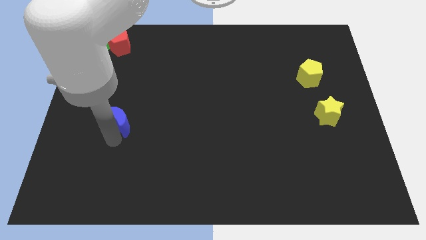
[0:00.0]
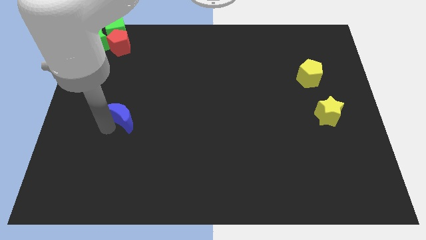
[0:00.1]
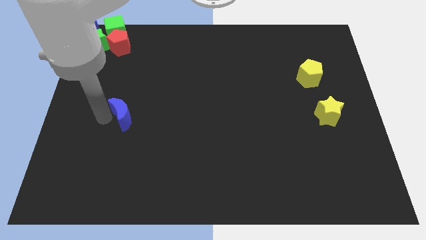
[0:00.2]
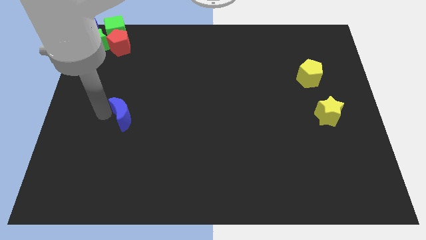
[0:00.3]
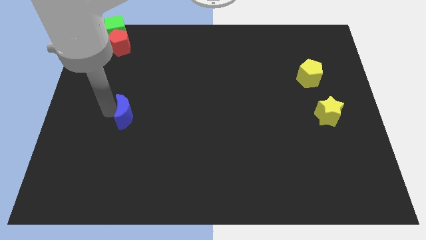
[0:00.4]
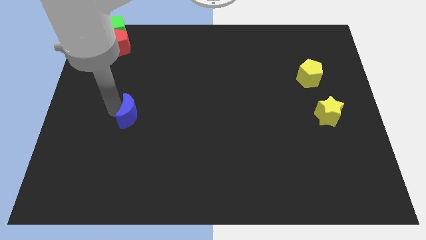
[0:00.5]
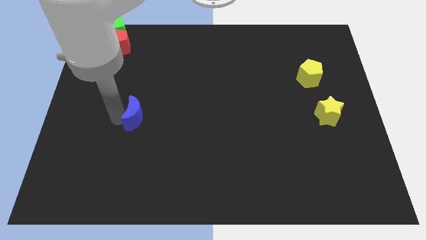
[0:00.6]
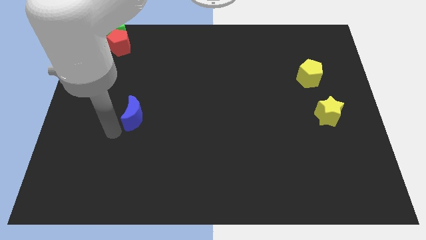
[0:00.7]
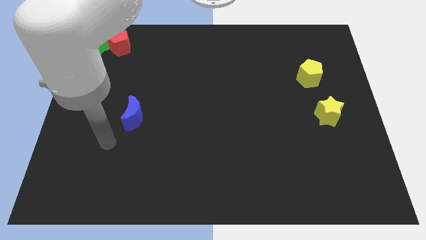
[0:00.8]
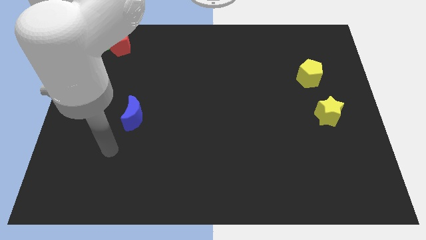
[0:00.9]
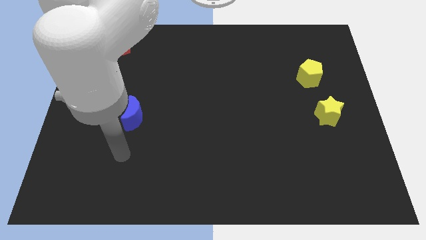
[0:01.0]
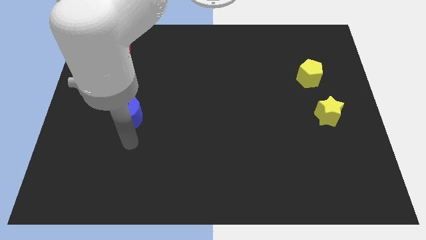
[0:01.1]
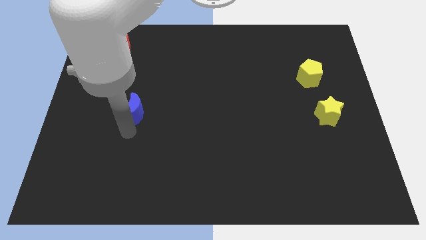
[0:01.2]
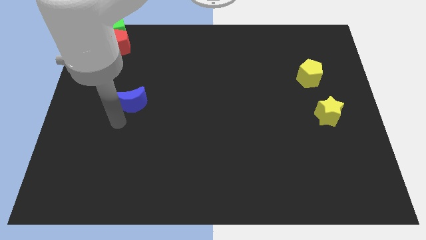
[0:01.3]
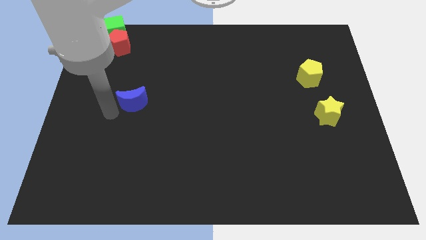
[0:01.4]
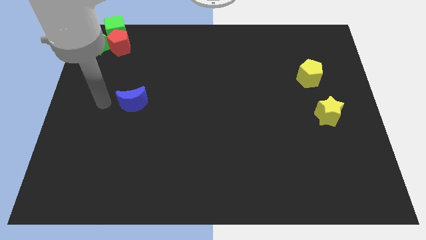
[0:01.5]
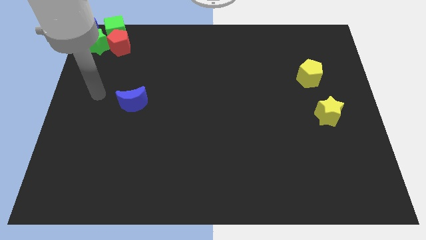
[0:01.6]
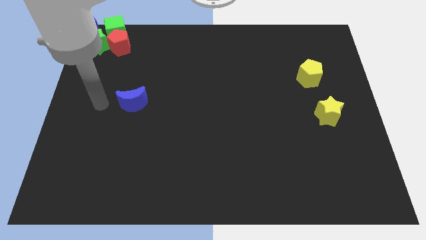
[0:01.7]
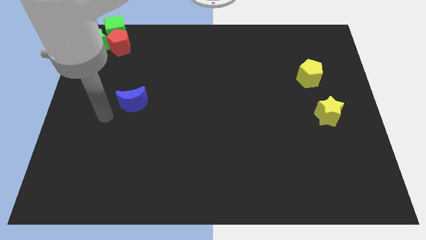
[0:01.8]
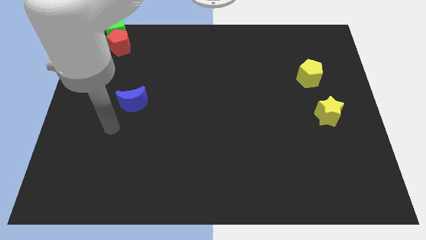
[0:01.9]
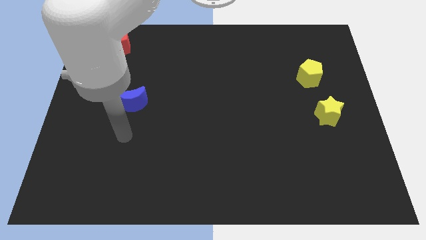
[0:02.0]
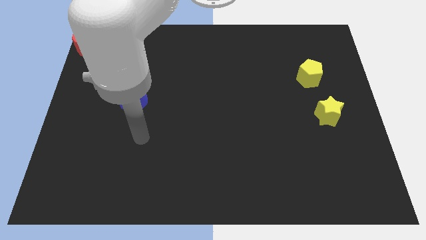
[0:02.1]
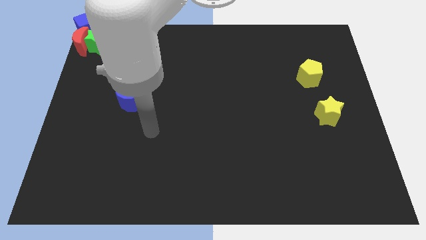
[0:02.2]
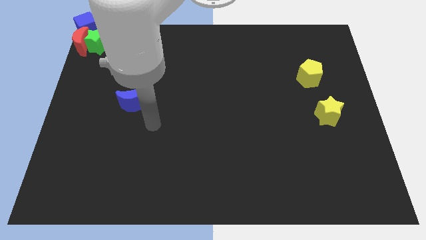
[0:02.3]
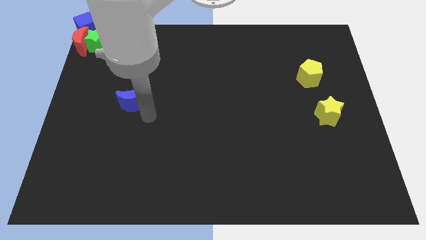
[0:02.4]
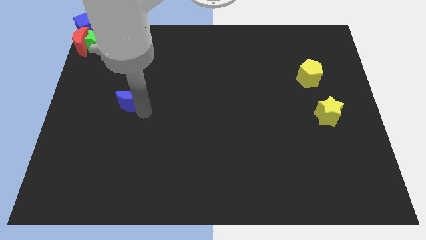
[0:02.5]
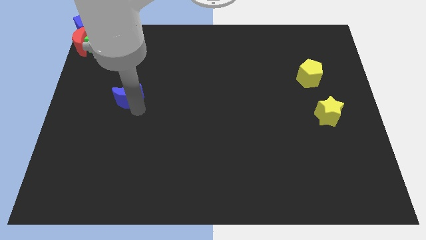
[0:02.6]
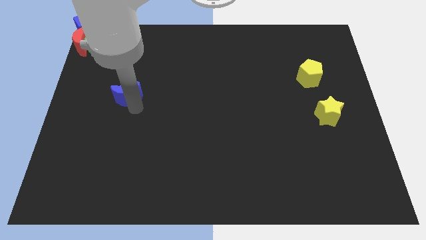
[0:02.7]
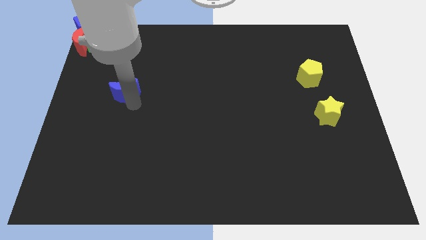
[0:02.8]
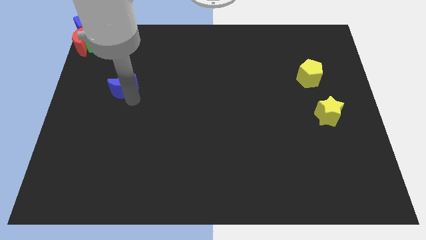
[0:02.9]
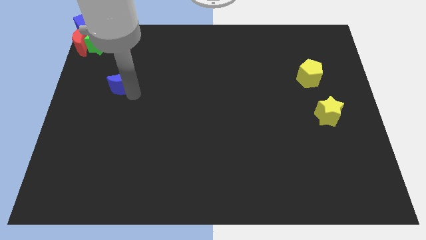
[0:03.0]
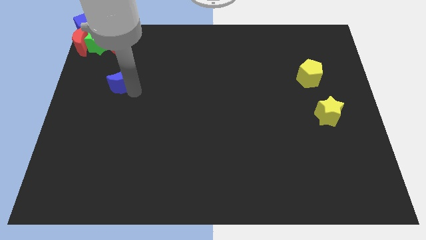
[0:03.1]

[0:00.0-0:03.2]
push the blue moon towards the group of blocks

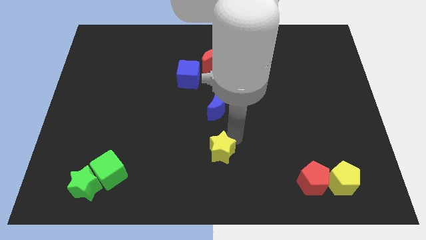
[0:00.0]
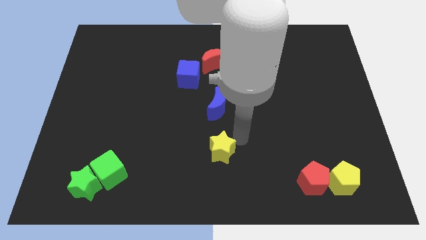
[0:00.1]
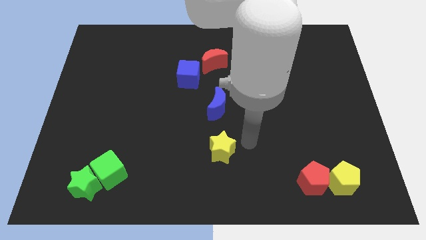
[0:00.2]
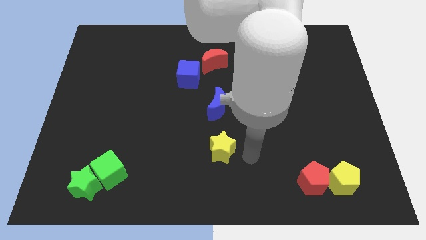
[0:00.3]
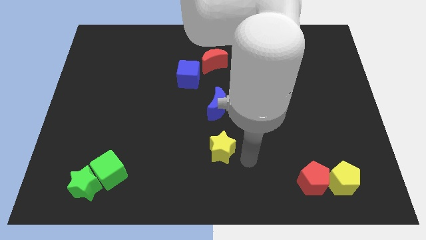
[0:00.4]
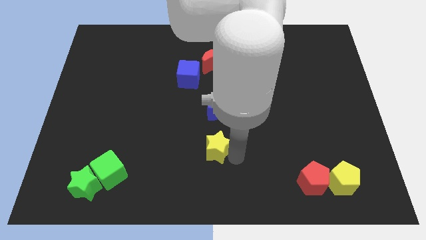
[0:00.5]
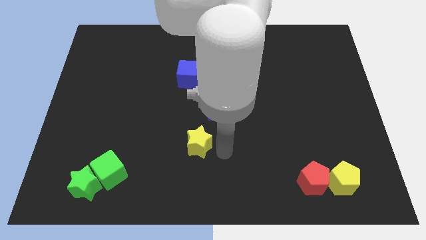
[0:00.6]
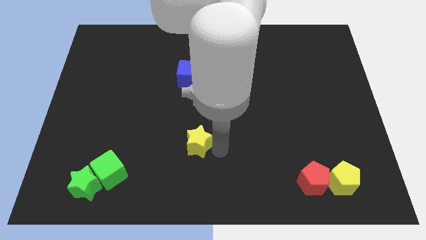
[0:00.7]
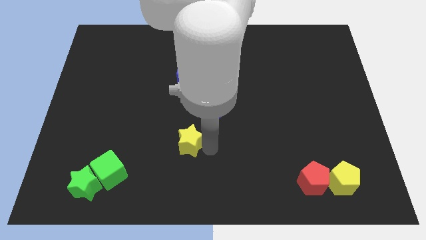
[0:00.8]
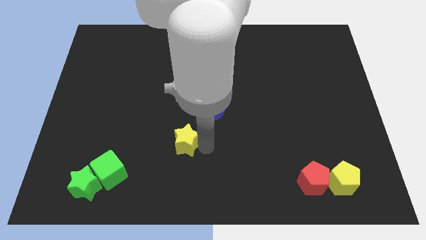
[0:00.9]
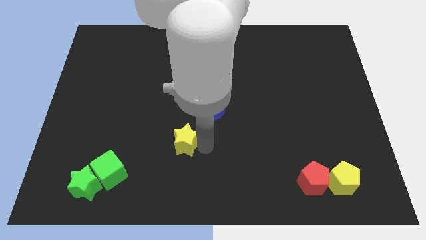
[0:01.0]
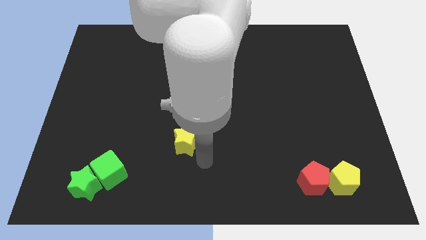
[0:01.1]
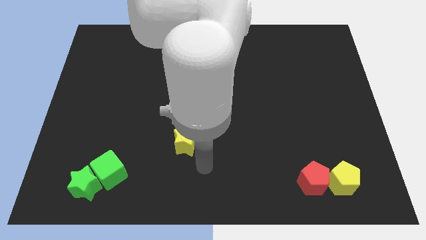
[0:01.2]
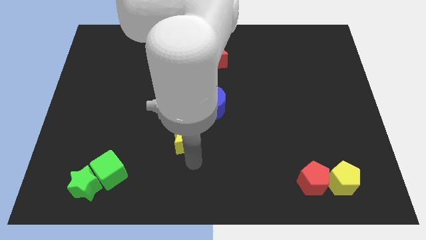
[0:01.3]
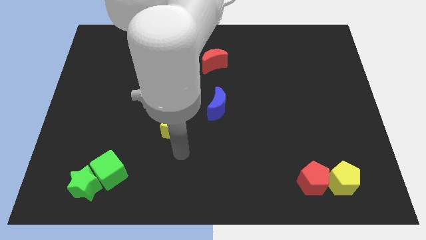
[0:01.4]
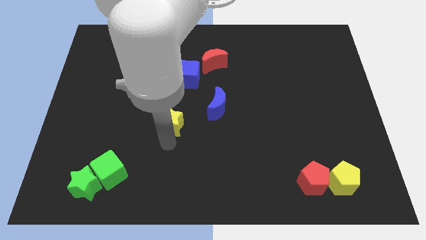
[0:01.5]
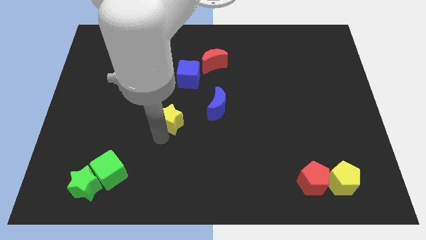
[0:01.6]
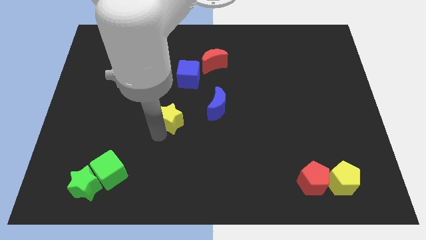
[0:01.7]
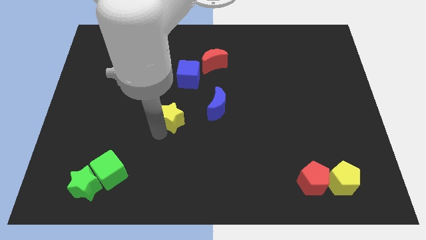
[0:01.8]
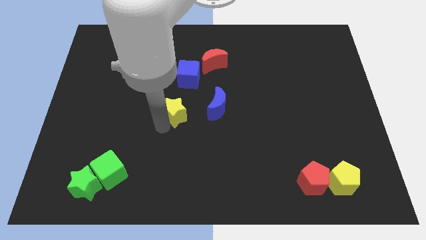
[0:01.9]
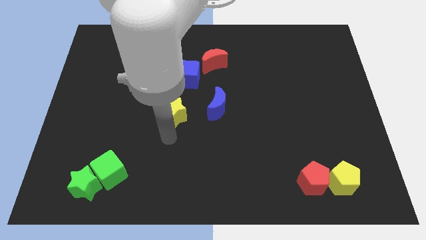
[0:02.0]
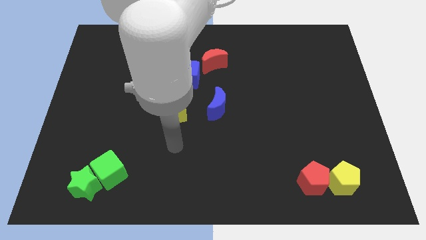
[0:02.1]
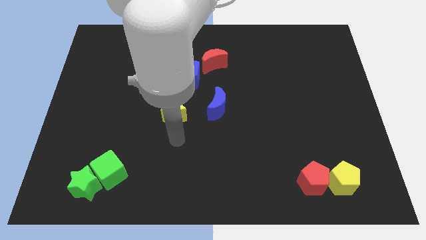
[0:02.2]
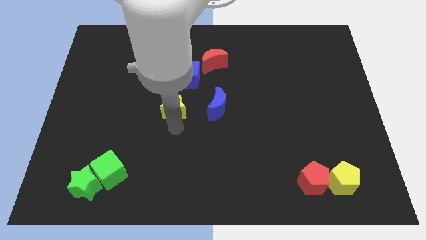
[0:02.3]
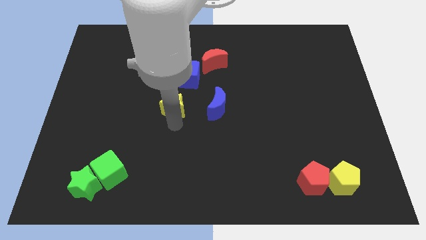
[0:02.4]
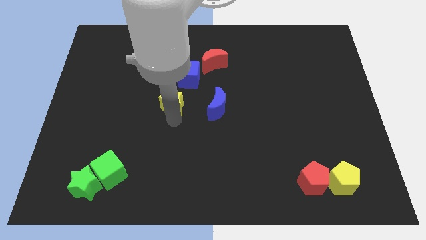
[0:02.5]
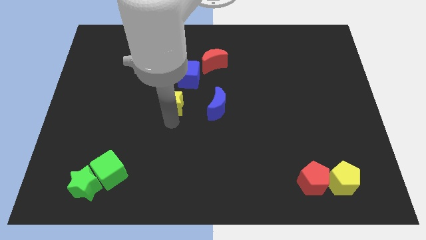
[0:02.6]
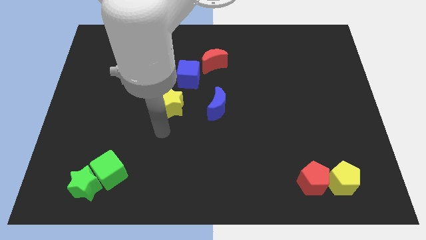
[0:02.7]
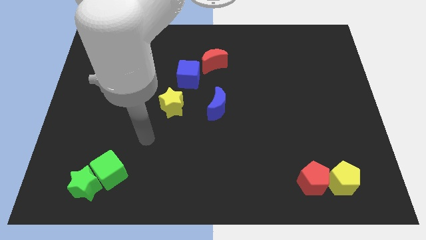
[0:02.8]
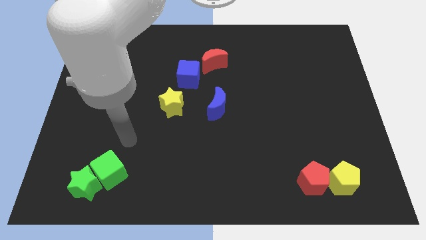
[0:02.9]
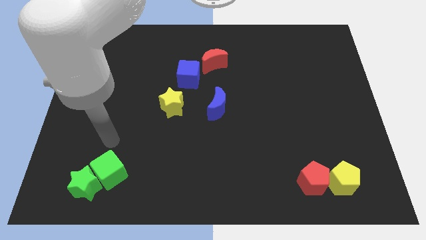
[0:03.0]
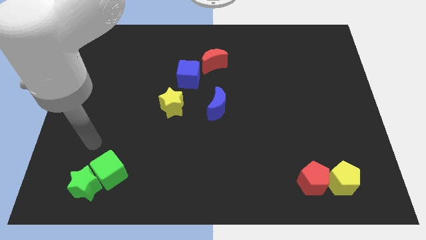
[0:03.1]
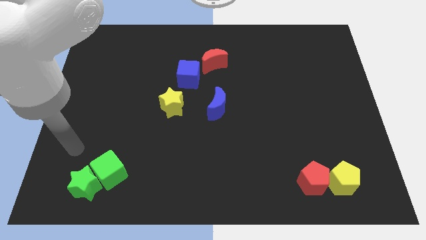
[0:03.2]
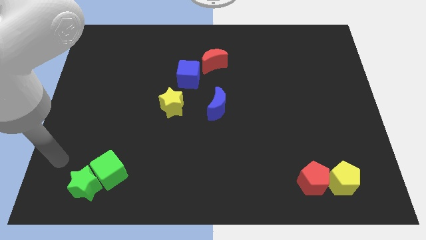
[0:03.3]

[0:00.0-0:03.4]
push the yellow star below to the blue cube

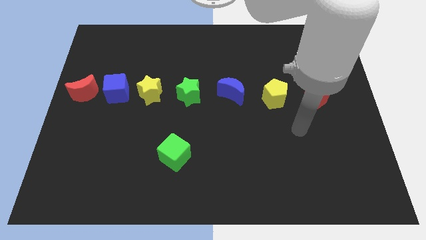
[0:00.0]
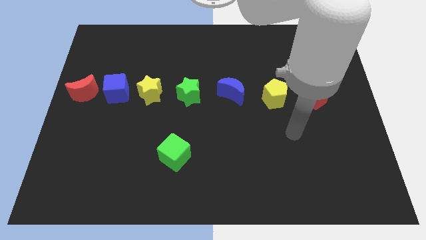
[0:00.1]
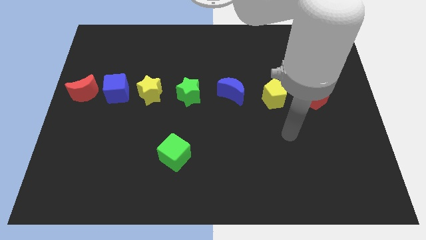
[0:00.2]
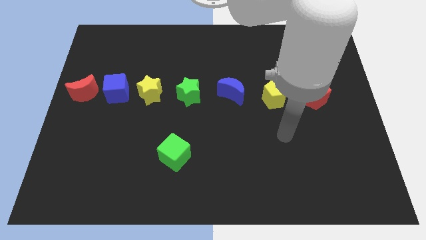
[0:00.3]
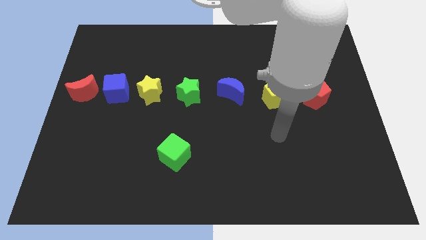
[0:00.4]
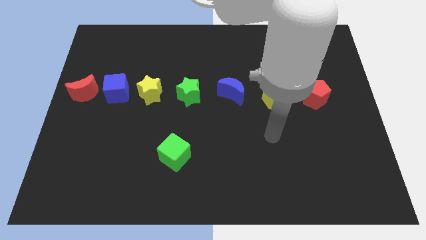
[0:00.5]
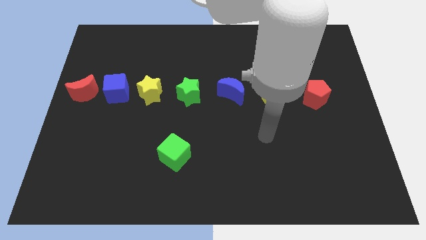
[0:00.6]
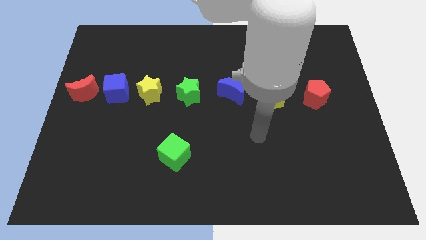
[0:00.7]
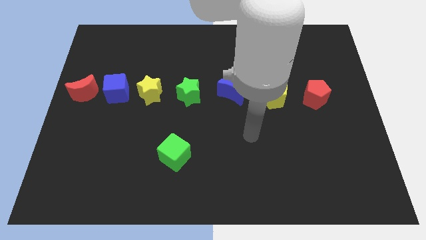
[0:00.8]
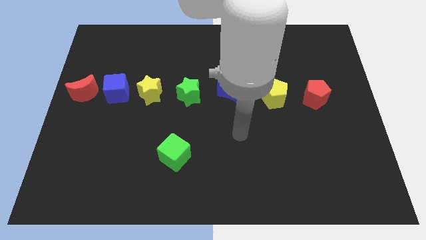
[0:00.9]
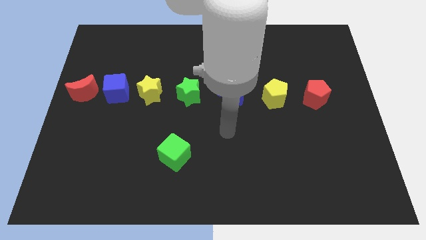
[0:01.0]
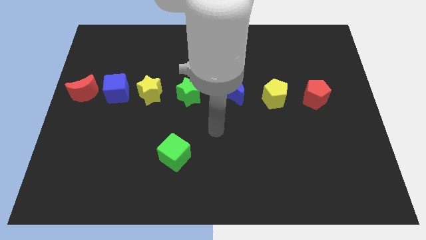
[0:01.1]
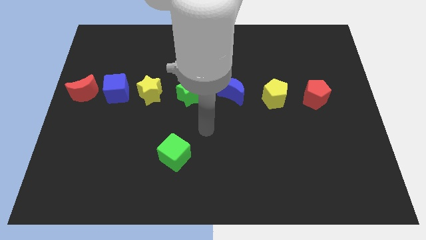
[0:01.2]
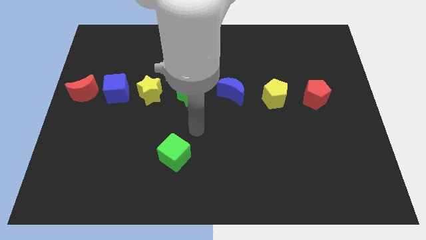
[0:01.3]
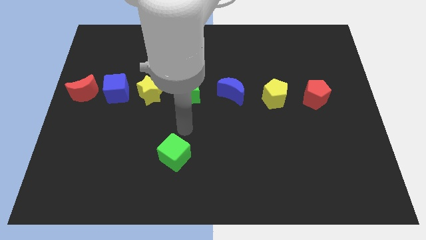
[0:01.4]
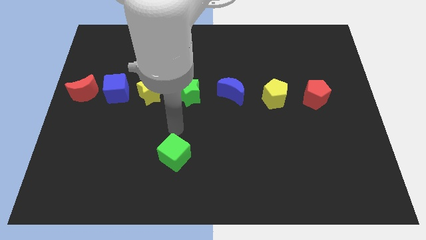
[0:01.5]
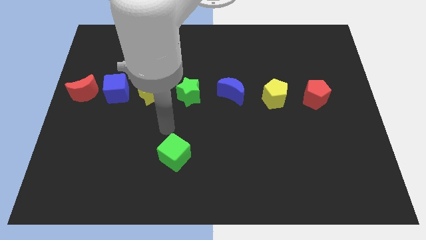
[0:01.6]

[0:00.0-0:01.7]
place your arm above the green cube

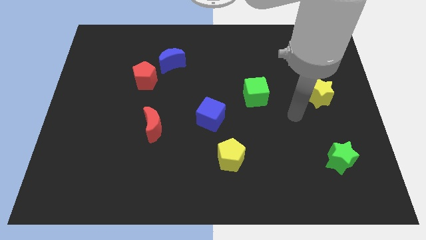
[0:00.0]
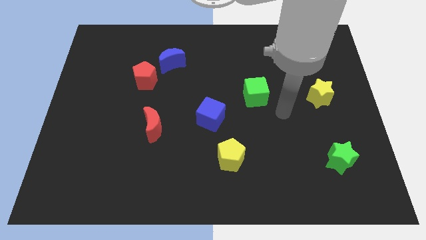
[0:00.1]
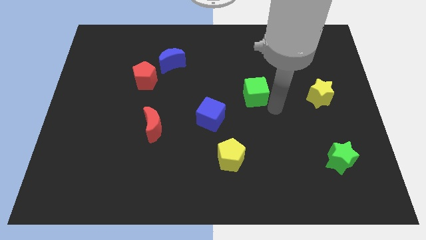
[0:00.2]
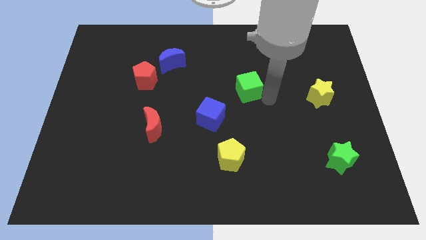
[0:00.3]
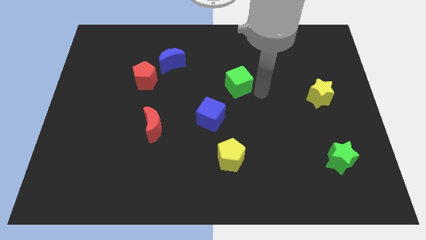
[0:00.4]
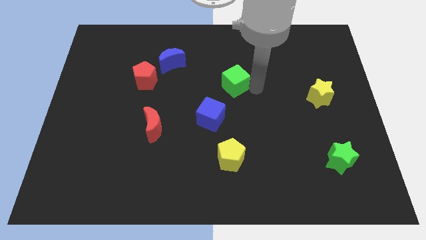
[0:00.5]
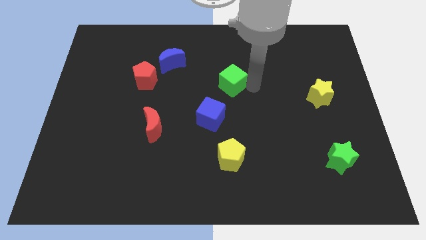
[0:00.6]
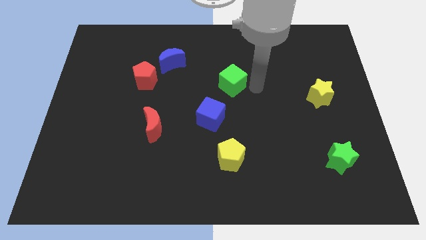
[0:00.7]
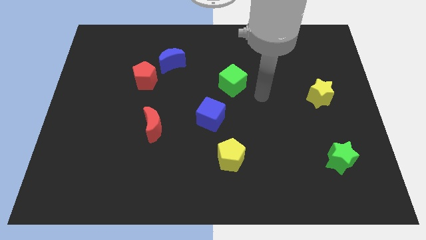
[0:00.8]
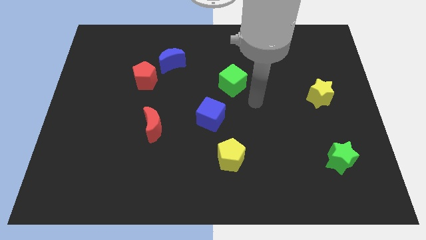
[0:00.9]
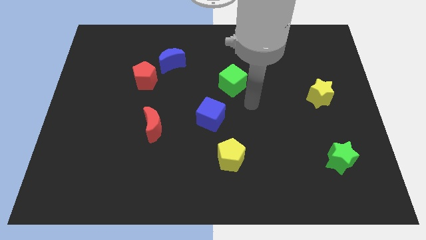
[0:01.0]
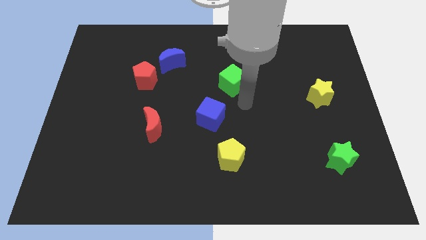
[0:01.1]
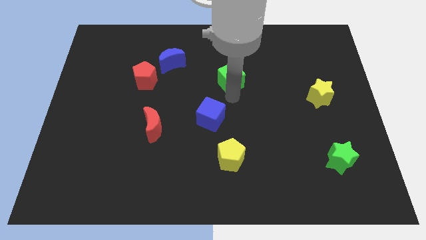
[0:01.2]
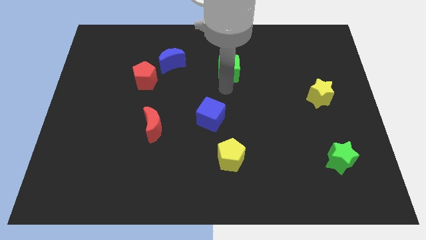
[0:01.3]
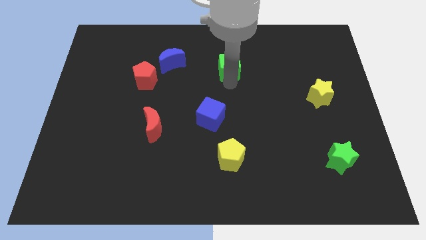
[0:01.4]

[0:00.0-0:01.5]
push the green cube vertically above the yellow pentagon
